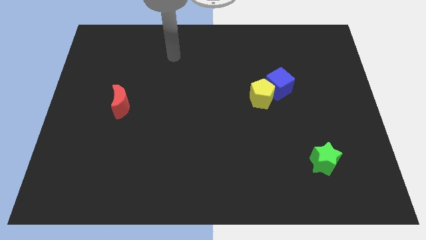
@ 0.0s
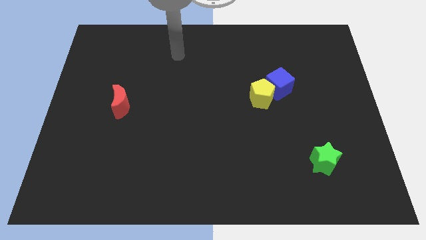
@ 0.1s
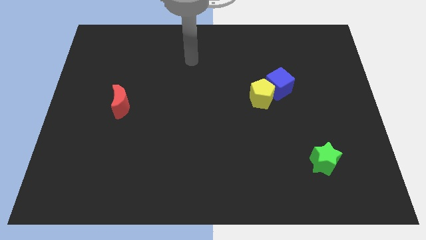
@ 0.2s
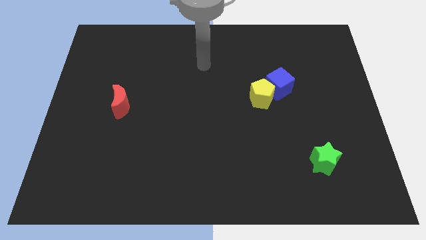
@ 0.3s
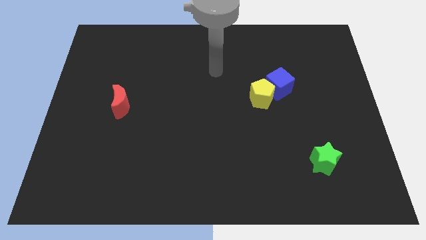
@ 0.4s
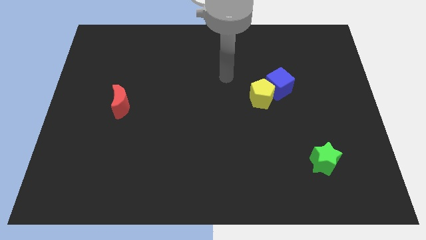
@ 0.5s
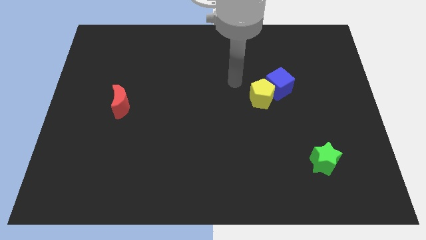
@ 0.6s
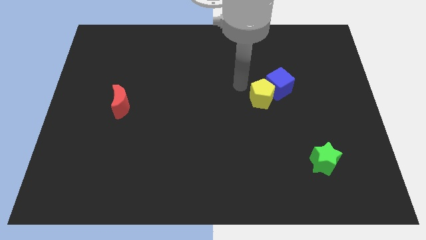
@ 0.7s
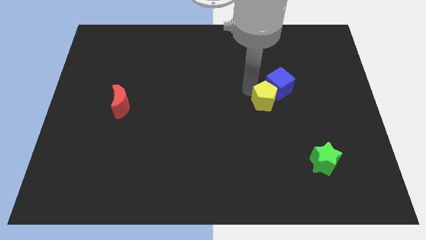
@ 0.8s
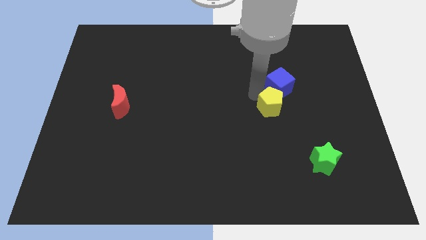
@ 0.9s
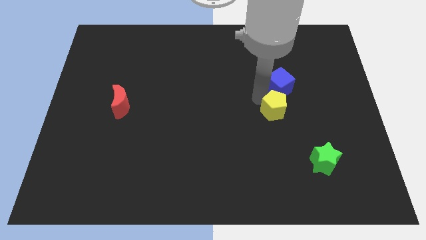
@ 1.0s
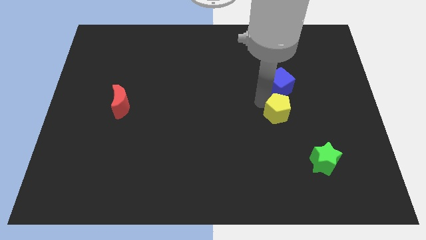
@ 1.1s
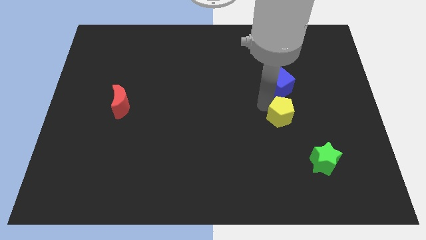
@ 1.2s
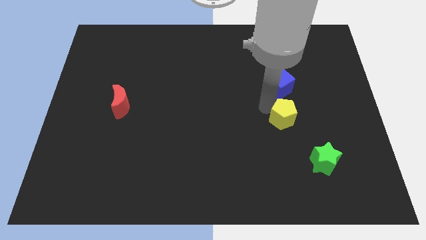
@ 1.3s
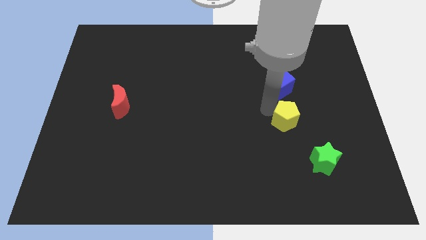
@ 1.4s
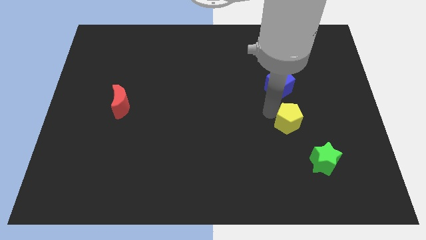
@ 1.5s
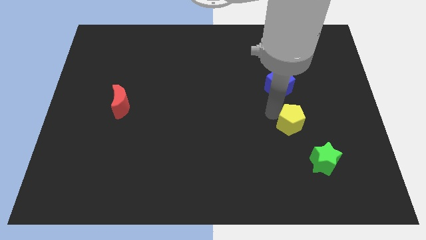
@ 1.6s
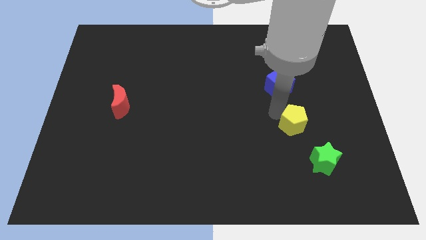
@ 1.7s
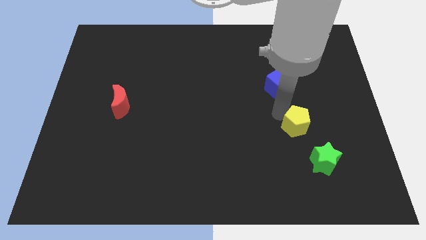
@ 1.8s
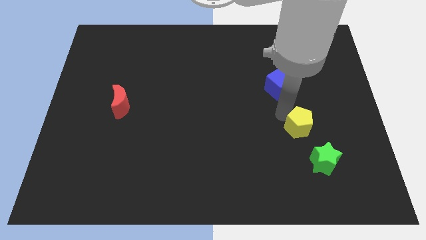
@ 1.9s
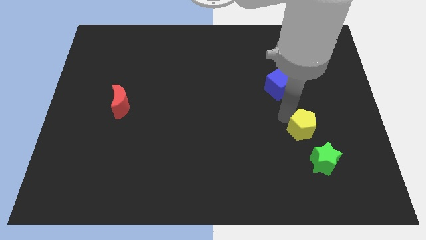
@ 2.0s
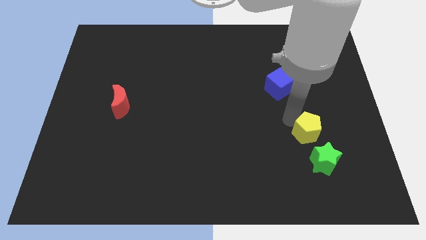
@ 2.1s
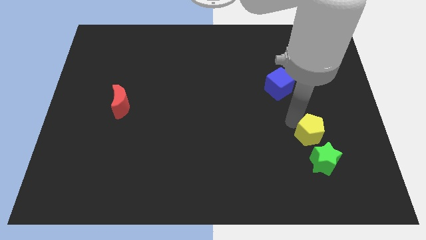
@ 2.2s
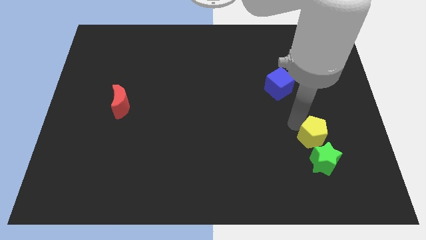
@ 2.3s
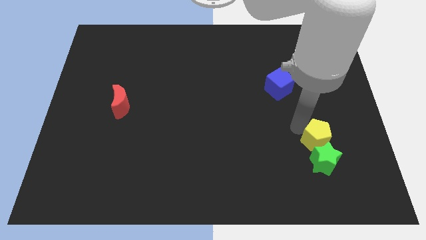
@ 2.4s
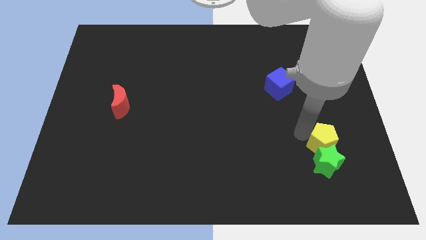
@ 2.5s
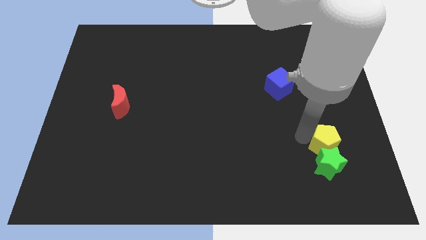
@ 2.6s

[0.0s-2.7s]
move the pentagon to the green star

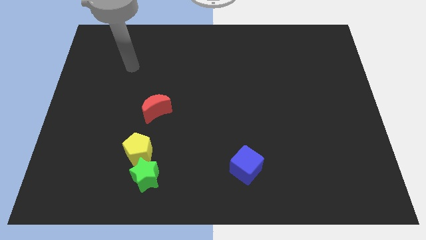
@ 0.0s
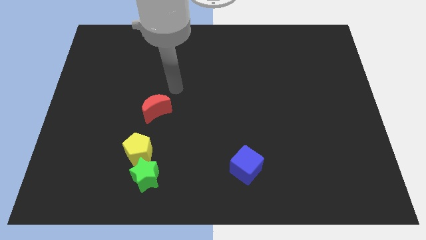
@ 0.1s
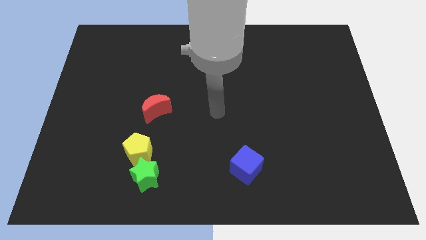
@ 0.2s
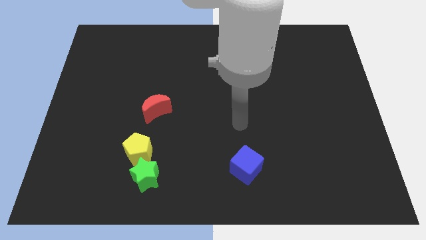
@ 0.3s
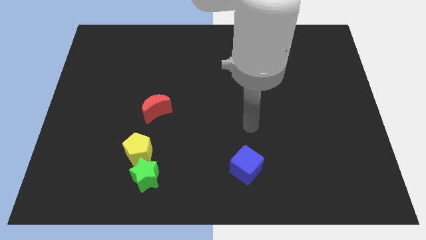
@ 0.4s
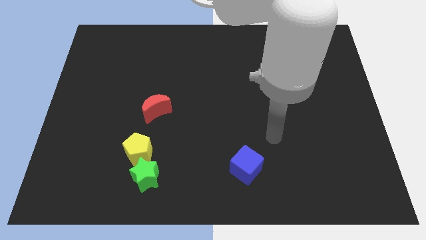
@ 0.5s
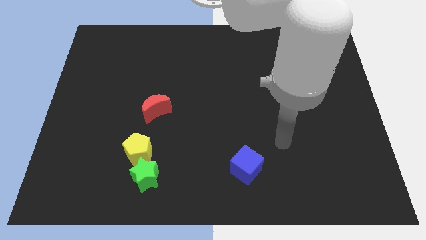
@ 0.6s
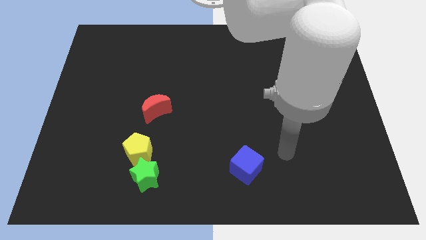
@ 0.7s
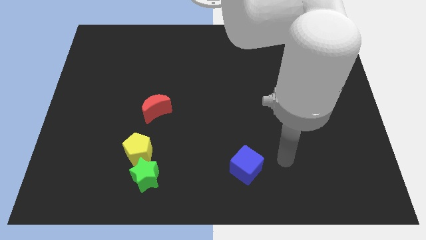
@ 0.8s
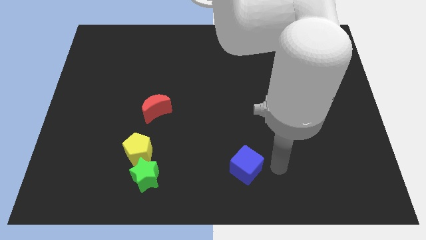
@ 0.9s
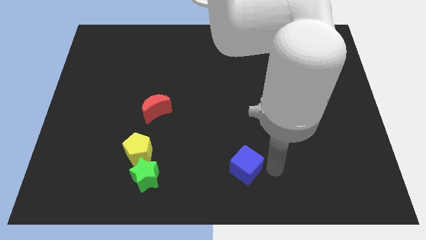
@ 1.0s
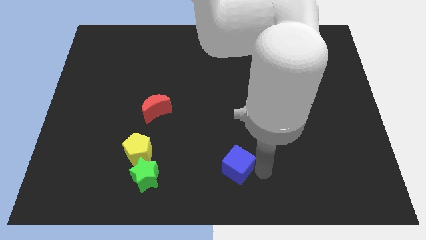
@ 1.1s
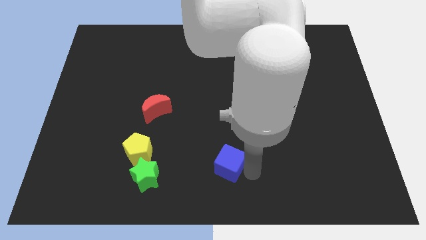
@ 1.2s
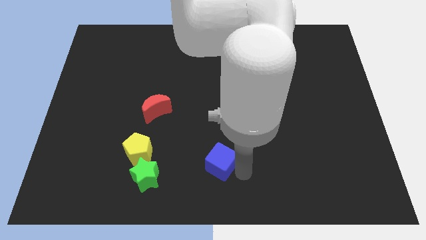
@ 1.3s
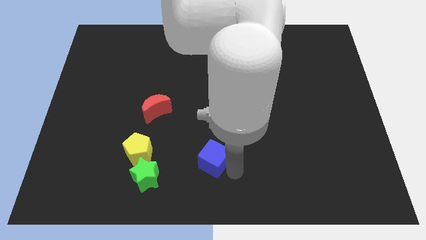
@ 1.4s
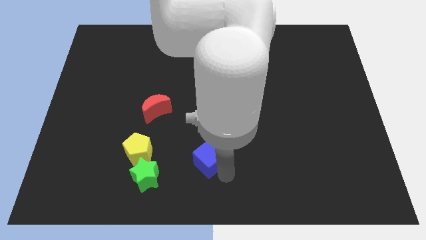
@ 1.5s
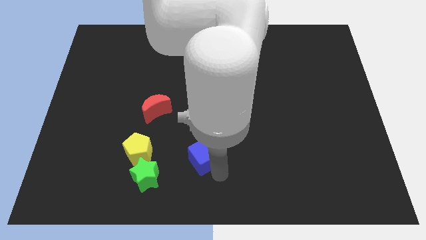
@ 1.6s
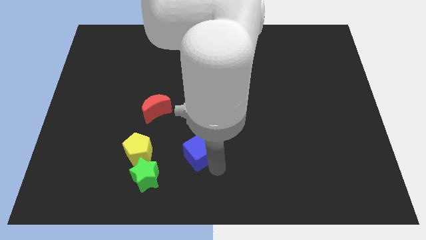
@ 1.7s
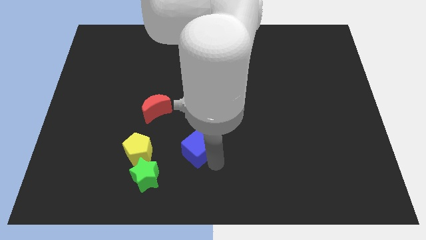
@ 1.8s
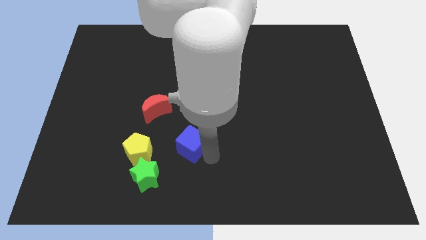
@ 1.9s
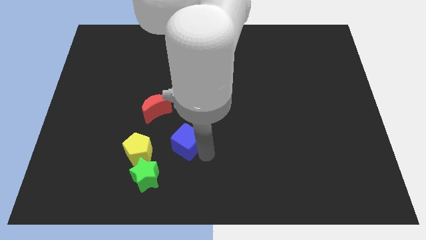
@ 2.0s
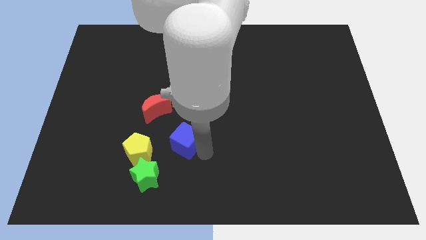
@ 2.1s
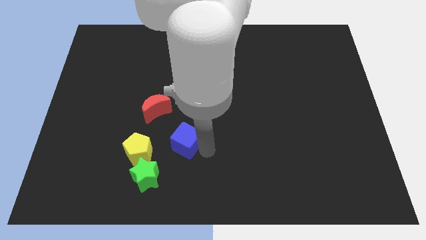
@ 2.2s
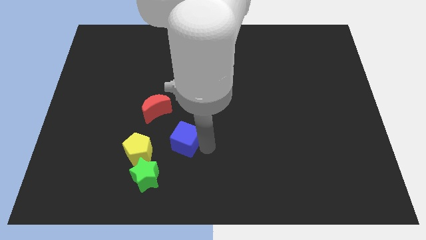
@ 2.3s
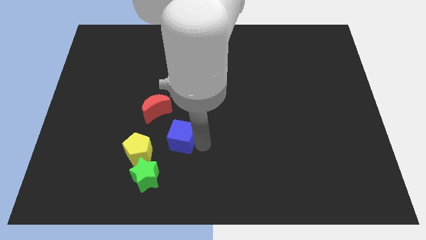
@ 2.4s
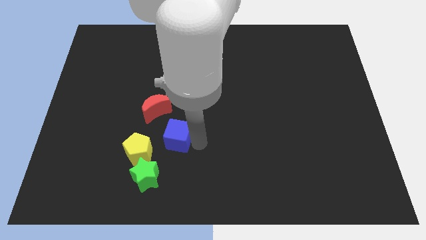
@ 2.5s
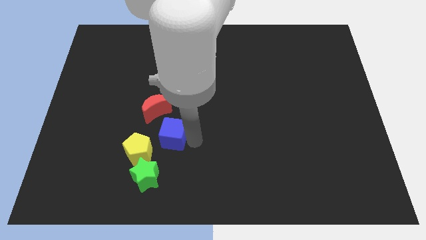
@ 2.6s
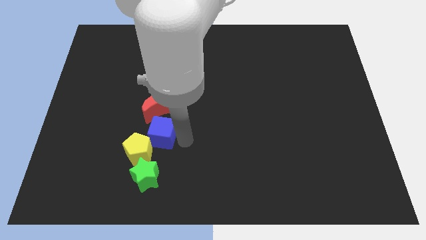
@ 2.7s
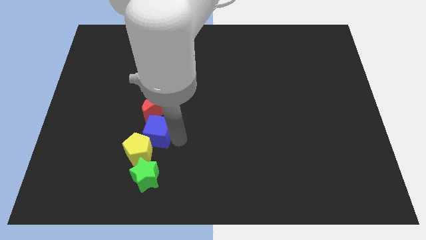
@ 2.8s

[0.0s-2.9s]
push the cube next to the yellow pentagon

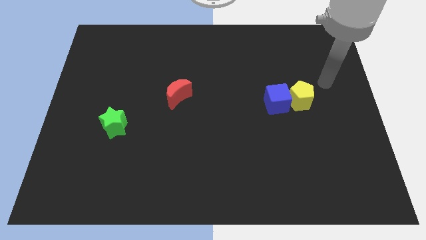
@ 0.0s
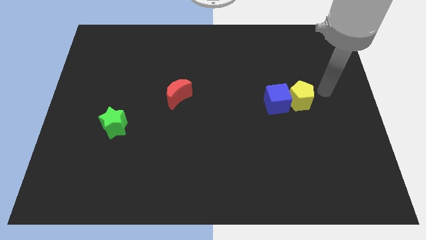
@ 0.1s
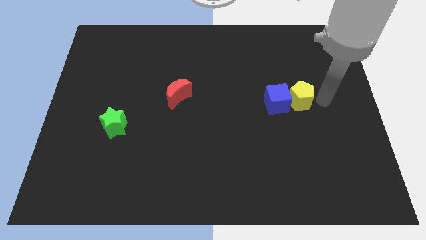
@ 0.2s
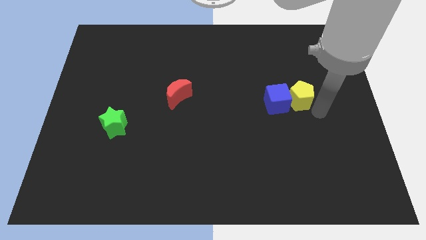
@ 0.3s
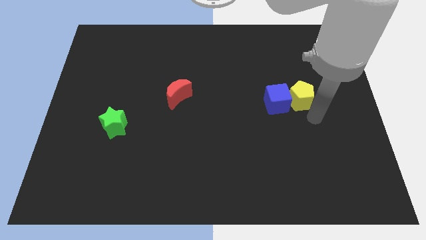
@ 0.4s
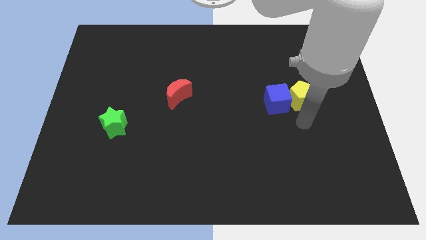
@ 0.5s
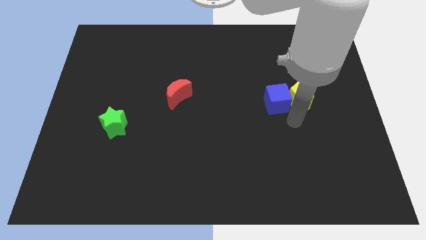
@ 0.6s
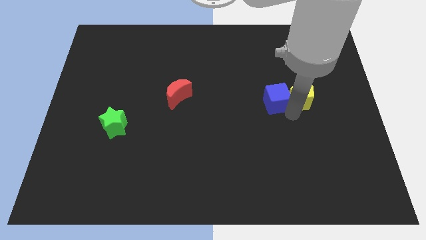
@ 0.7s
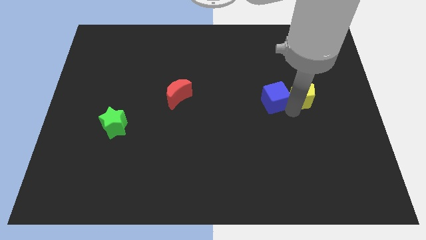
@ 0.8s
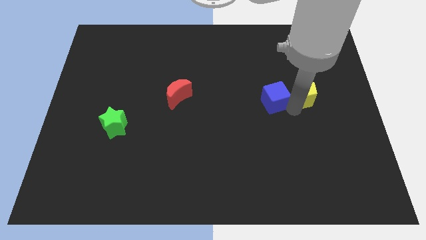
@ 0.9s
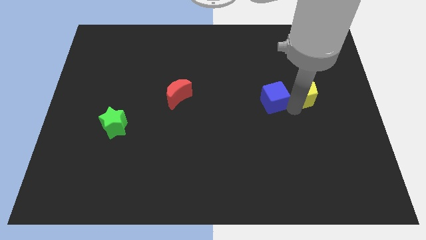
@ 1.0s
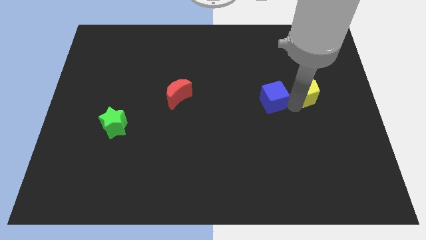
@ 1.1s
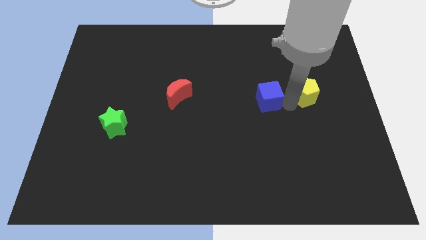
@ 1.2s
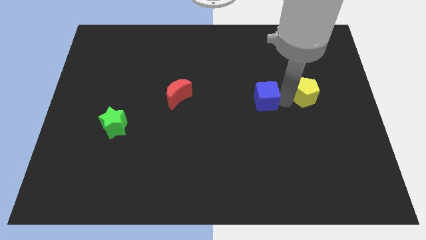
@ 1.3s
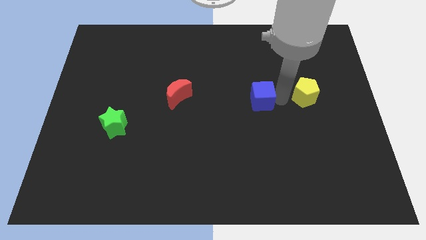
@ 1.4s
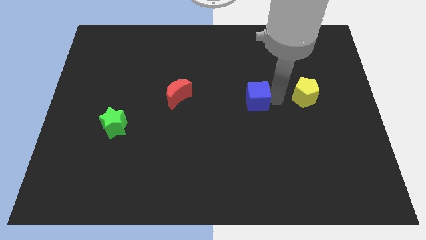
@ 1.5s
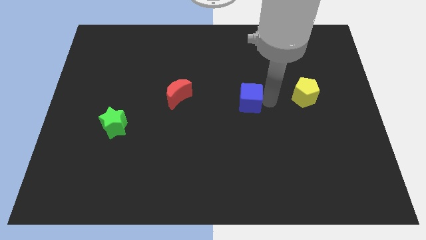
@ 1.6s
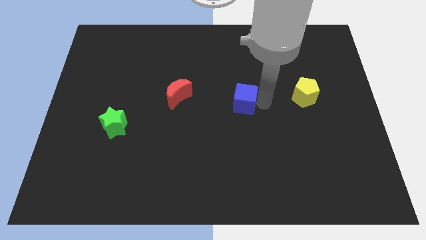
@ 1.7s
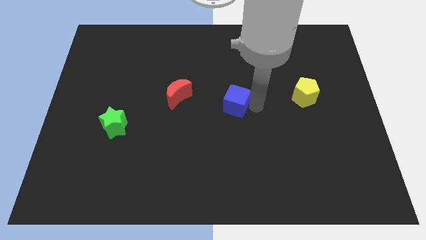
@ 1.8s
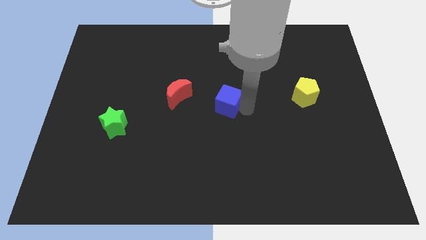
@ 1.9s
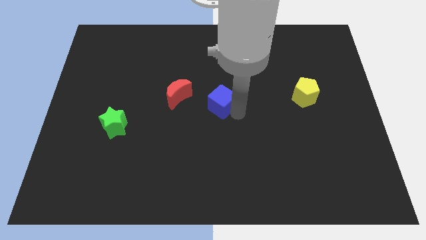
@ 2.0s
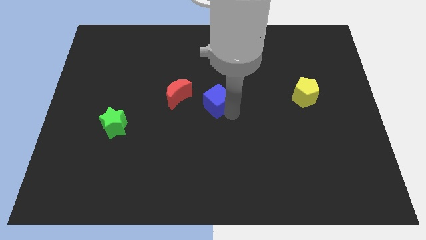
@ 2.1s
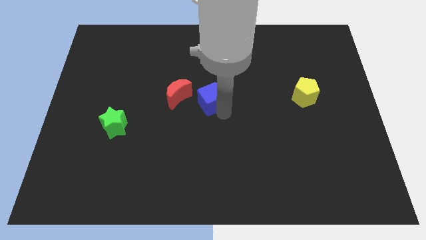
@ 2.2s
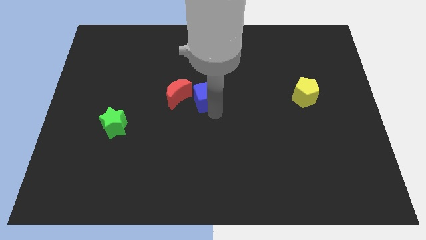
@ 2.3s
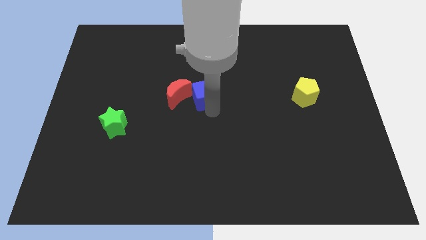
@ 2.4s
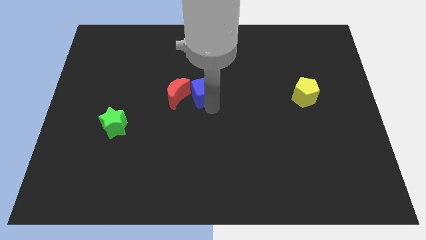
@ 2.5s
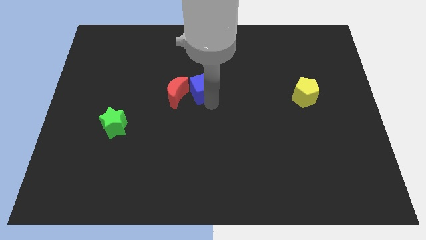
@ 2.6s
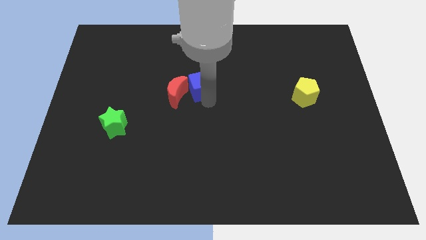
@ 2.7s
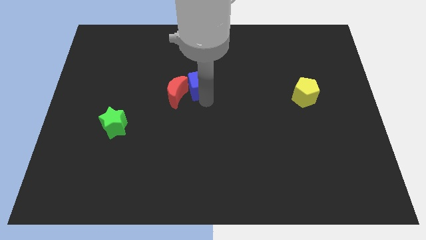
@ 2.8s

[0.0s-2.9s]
put the cube to the moon
